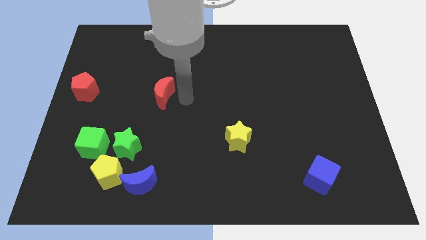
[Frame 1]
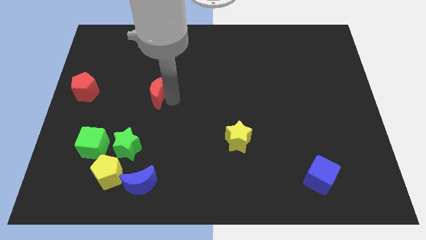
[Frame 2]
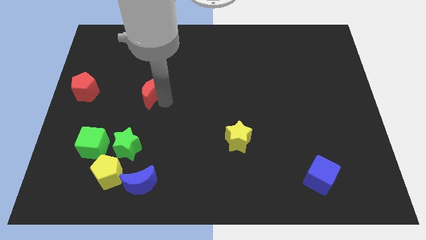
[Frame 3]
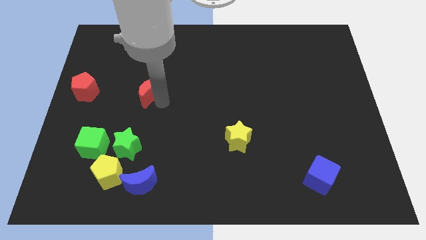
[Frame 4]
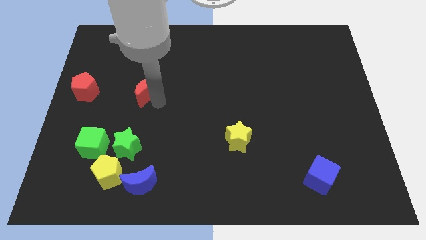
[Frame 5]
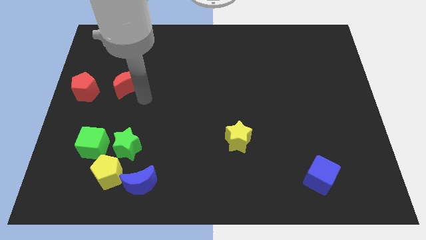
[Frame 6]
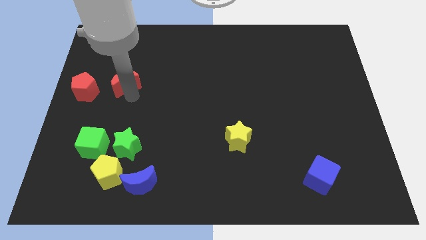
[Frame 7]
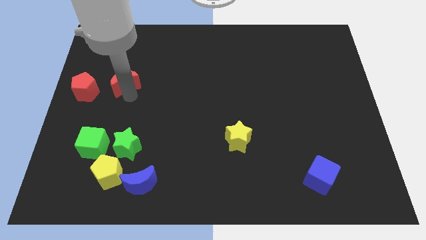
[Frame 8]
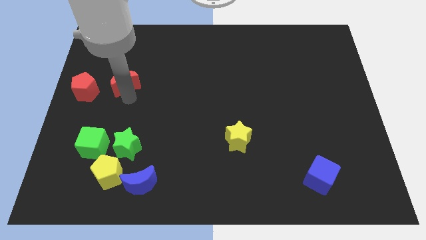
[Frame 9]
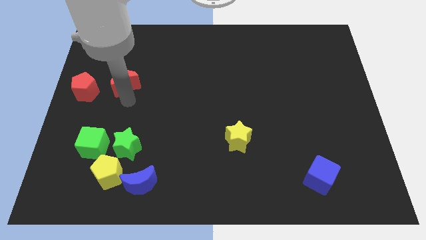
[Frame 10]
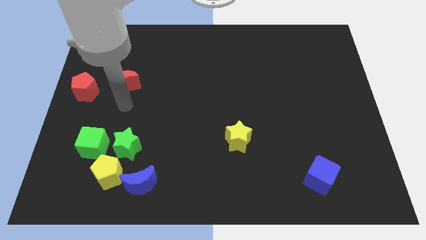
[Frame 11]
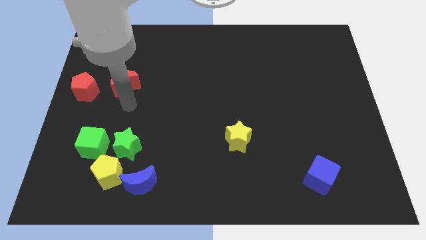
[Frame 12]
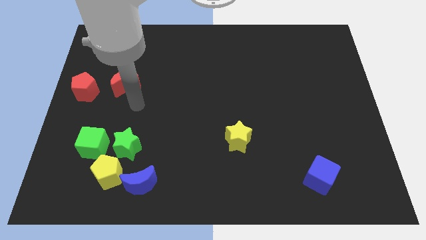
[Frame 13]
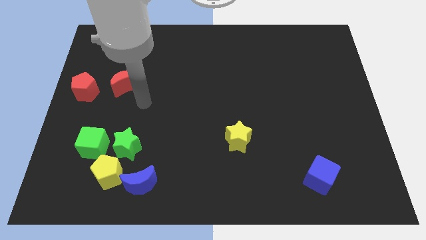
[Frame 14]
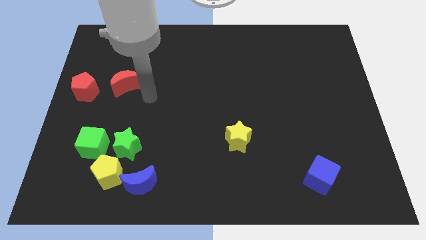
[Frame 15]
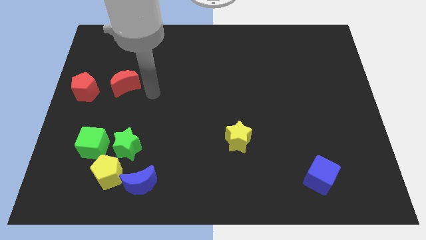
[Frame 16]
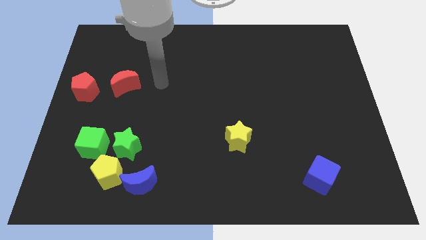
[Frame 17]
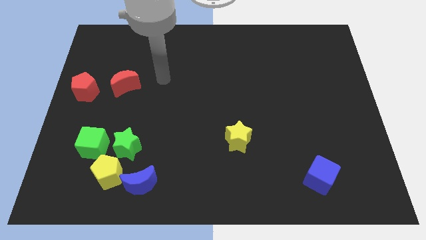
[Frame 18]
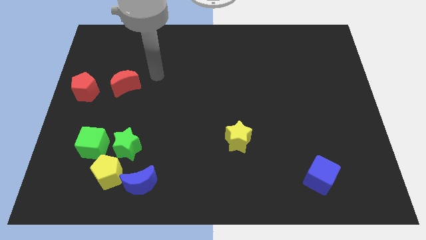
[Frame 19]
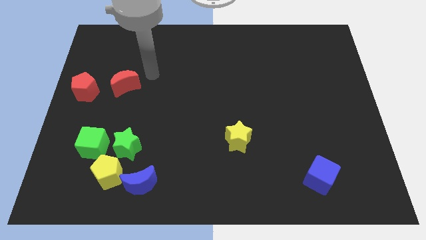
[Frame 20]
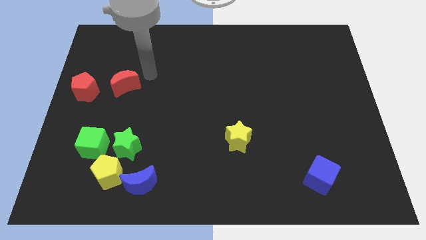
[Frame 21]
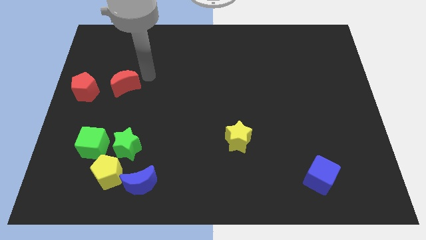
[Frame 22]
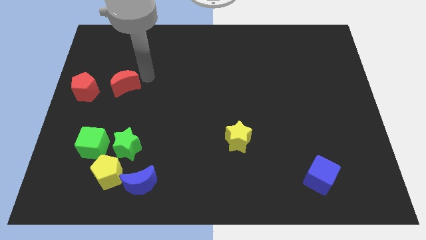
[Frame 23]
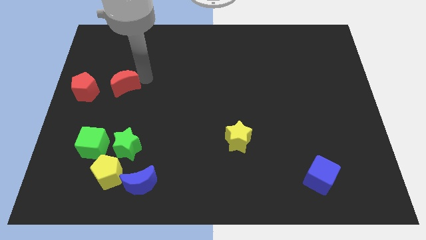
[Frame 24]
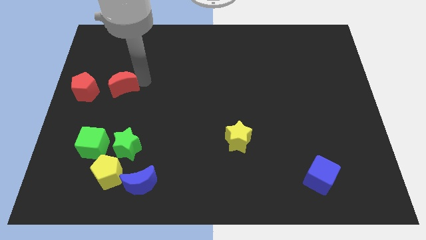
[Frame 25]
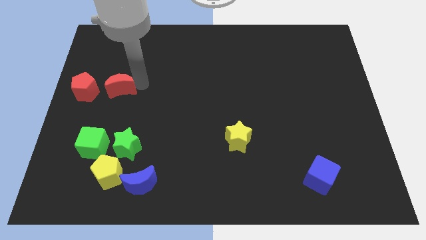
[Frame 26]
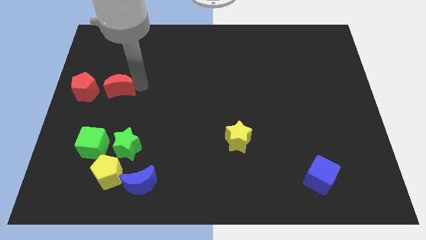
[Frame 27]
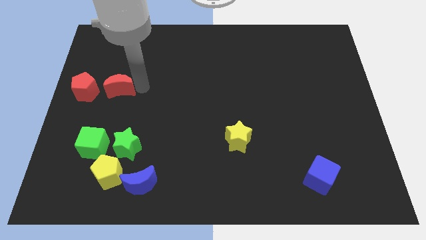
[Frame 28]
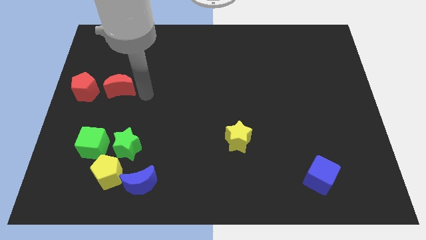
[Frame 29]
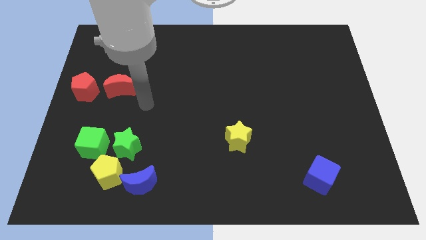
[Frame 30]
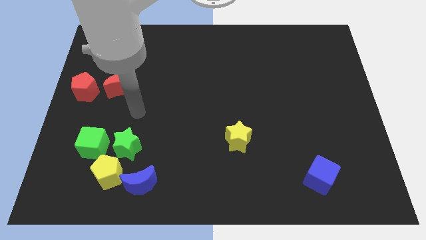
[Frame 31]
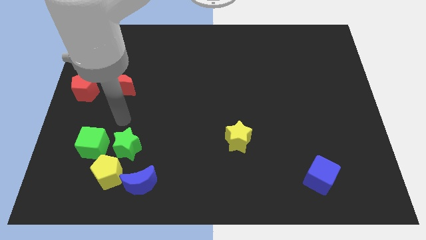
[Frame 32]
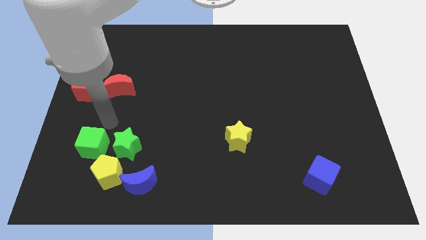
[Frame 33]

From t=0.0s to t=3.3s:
push the red crescent to the right side of the red pentagon

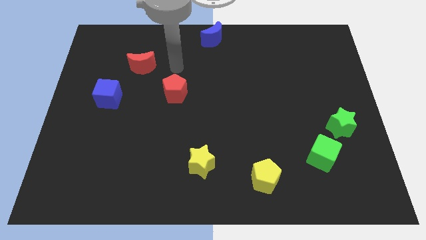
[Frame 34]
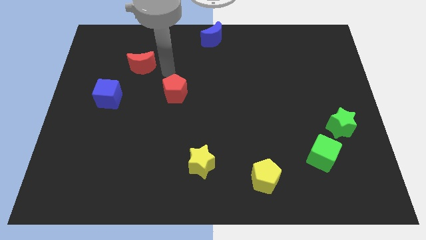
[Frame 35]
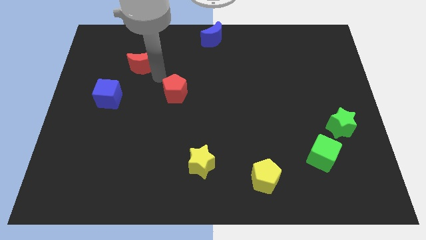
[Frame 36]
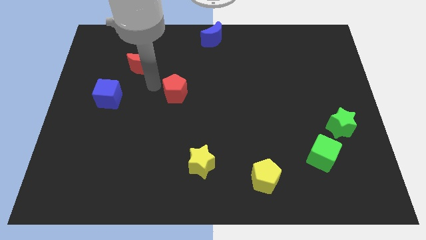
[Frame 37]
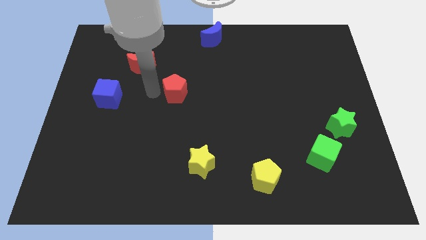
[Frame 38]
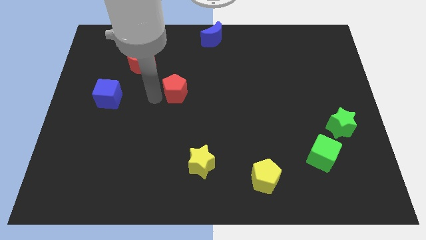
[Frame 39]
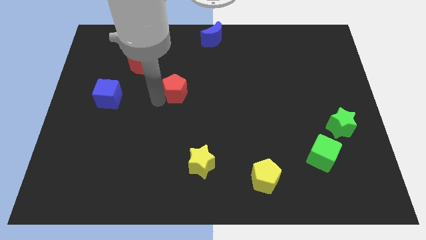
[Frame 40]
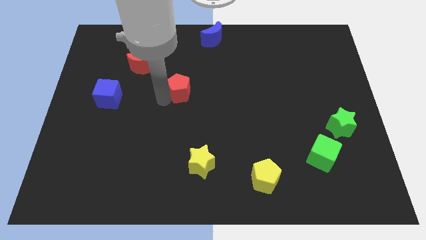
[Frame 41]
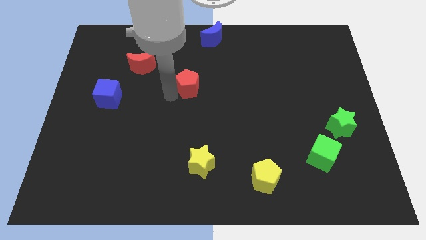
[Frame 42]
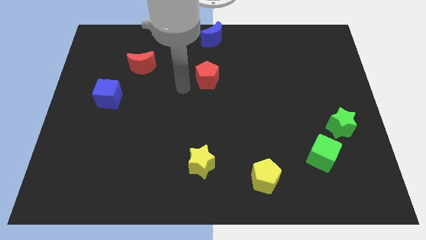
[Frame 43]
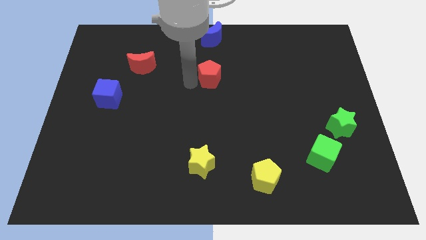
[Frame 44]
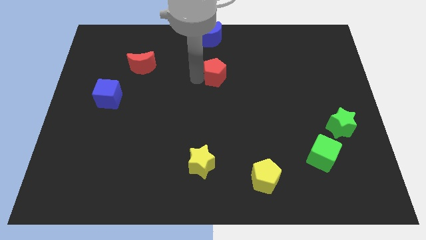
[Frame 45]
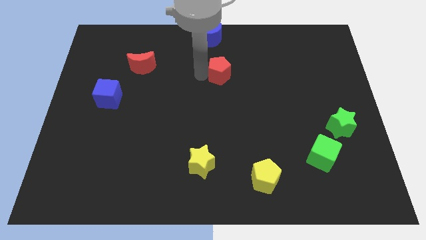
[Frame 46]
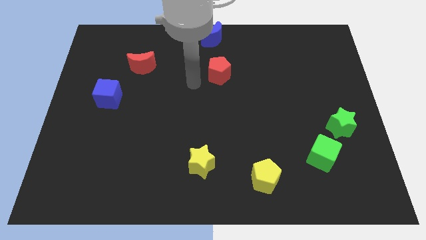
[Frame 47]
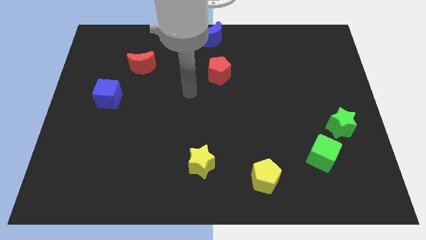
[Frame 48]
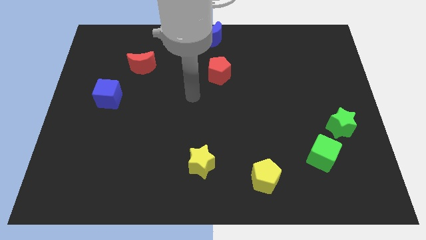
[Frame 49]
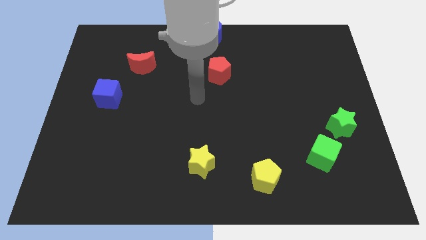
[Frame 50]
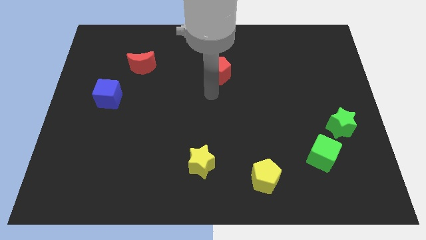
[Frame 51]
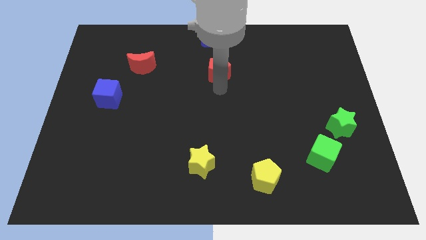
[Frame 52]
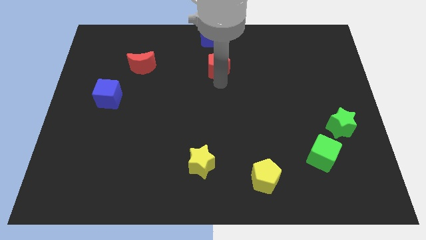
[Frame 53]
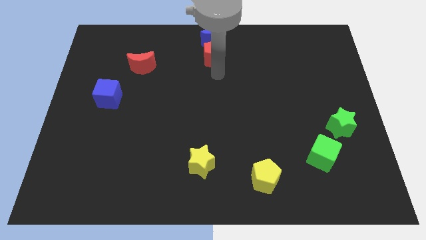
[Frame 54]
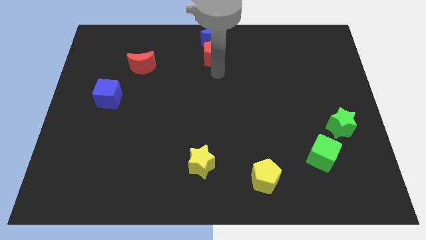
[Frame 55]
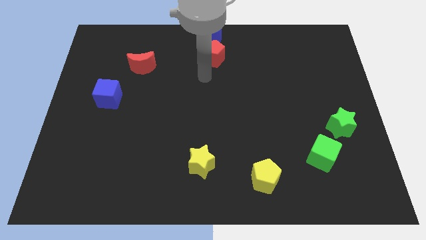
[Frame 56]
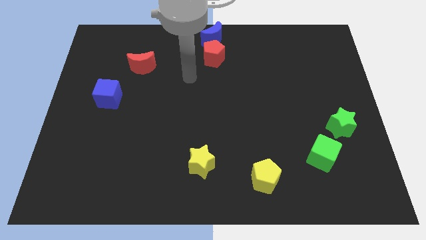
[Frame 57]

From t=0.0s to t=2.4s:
push red pentagon towards blue crescent

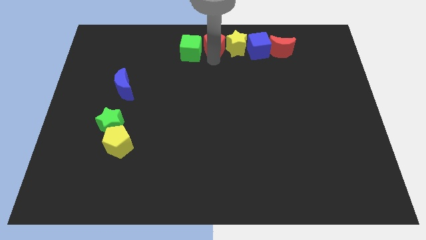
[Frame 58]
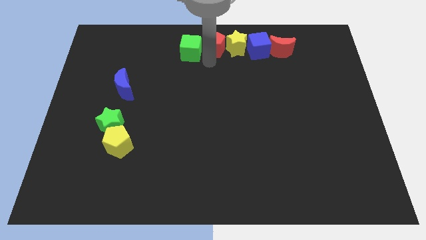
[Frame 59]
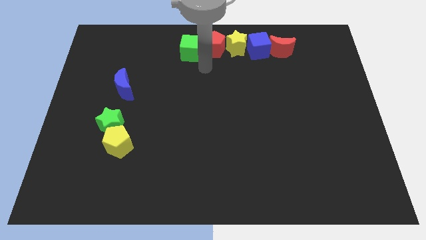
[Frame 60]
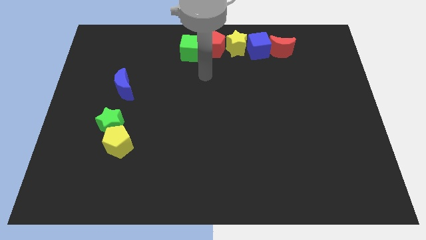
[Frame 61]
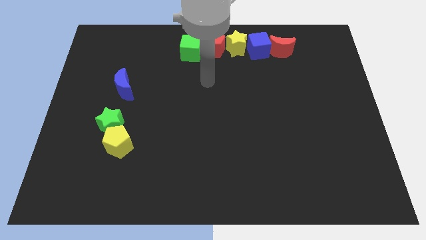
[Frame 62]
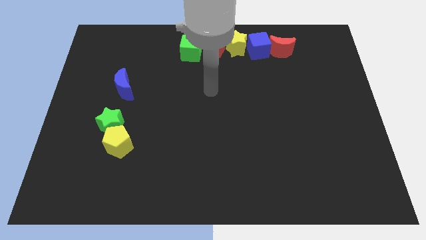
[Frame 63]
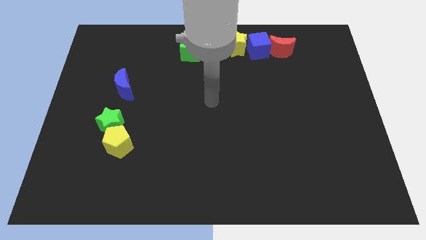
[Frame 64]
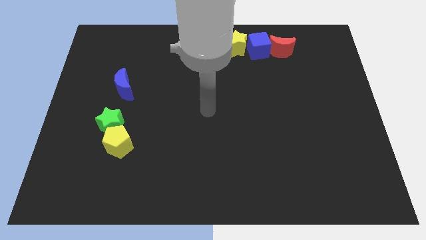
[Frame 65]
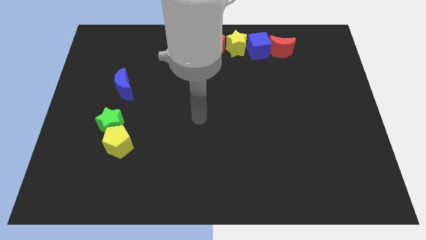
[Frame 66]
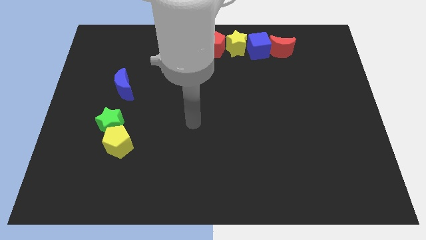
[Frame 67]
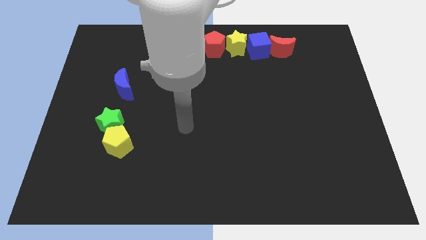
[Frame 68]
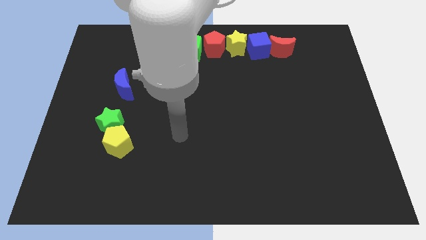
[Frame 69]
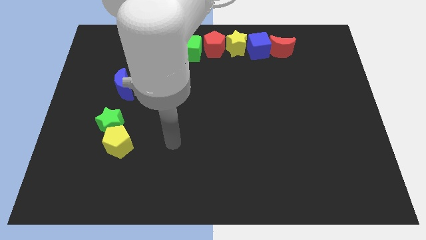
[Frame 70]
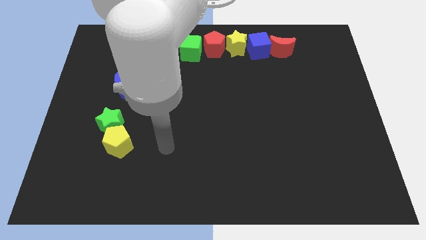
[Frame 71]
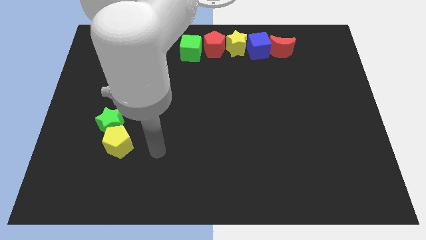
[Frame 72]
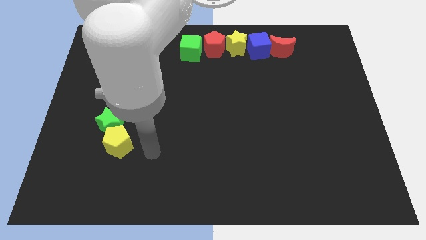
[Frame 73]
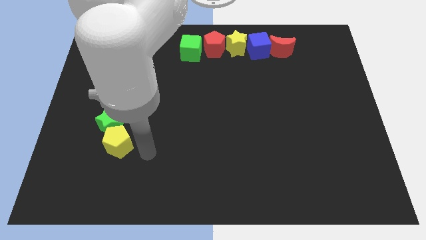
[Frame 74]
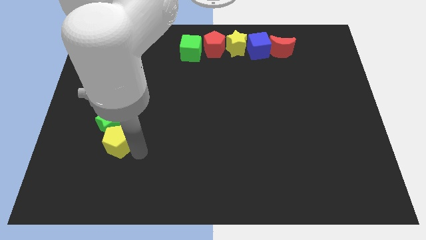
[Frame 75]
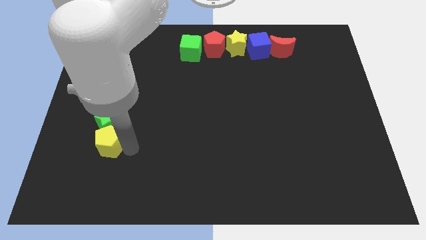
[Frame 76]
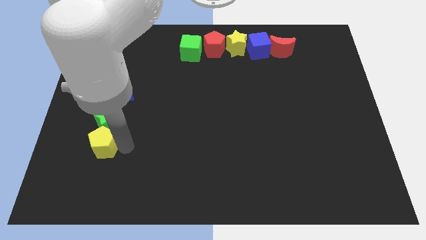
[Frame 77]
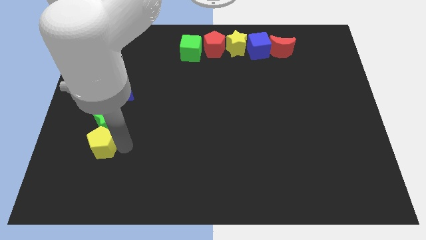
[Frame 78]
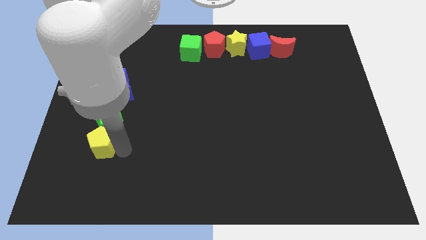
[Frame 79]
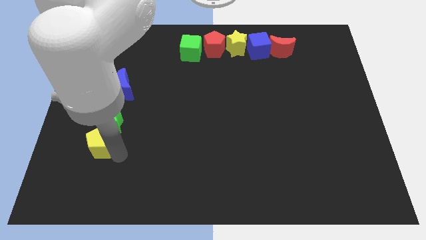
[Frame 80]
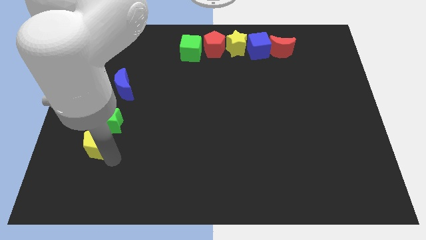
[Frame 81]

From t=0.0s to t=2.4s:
move your arm from the red pentagon to yellow pentagon

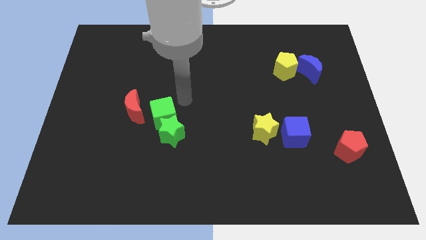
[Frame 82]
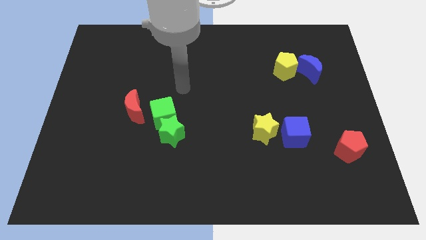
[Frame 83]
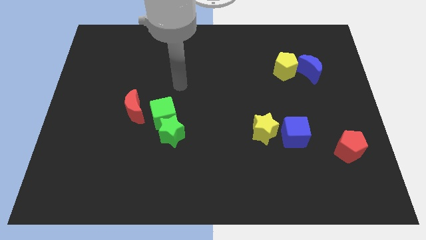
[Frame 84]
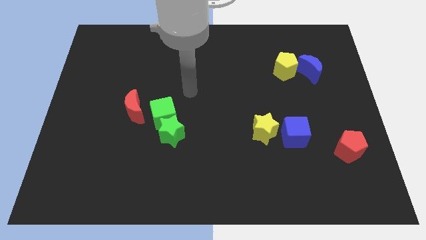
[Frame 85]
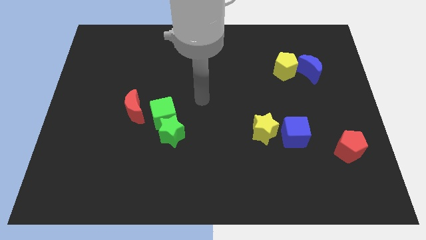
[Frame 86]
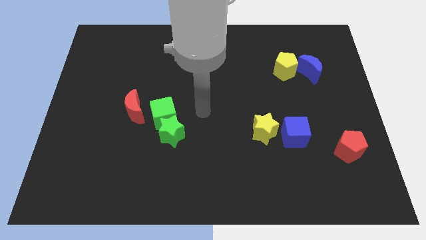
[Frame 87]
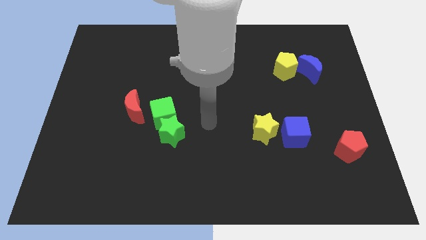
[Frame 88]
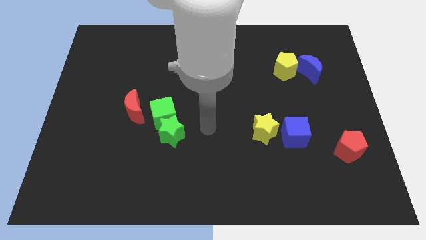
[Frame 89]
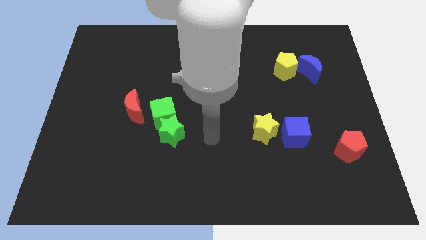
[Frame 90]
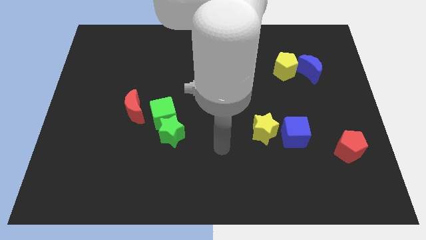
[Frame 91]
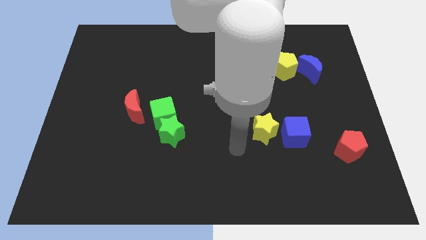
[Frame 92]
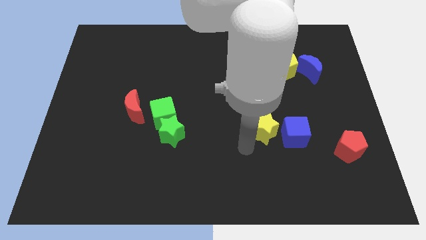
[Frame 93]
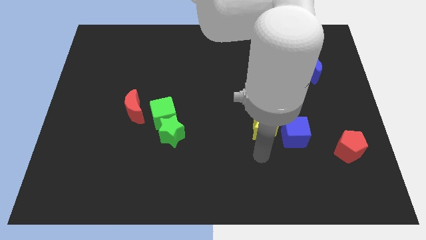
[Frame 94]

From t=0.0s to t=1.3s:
move your arm away from the green cube
